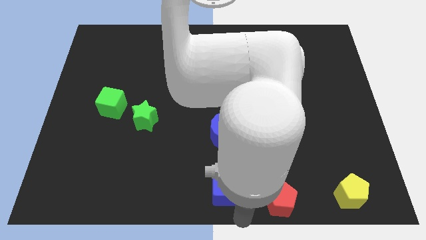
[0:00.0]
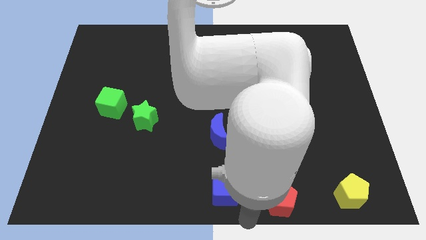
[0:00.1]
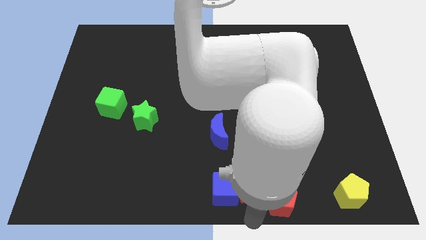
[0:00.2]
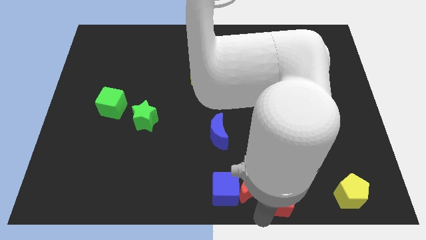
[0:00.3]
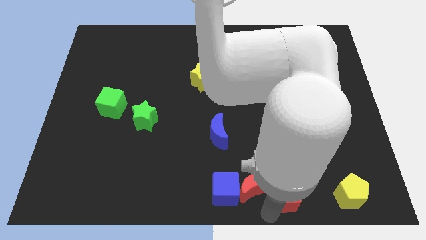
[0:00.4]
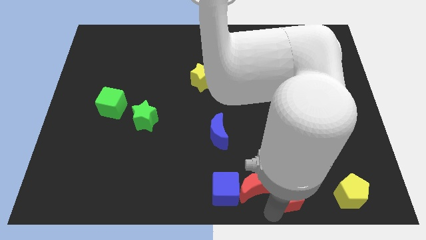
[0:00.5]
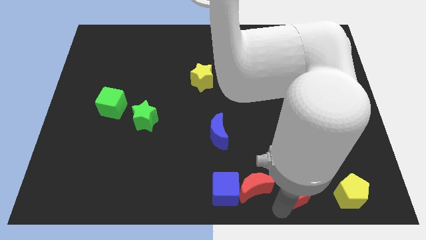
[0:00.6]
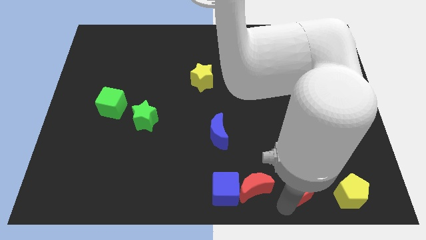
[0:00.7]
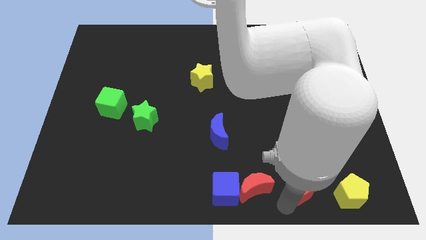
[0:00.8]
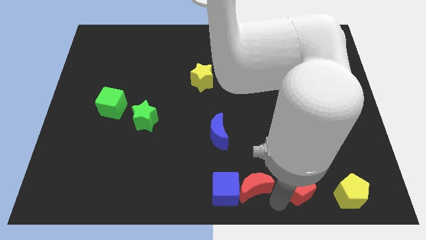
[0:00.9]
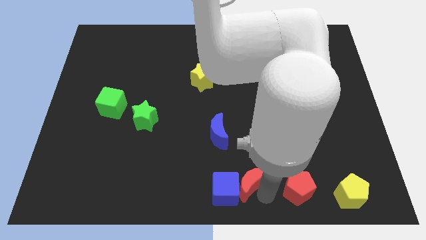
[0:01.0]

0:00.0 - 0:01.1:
separate red blocks from each other

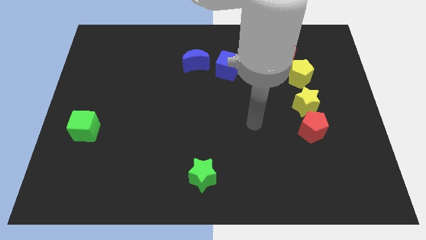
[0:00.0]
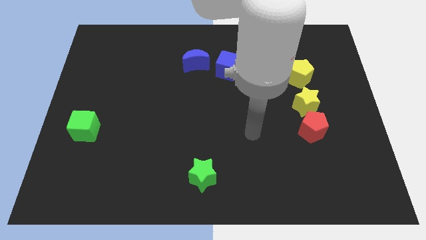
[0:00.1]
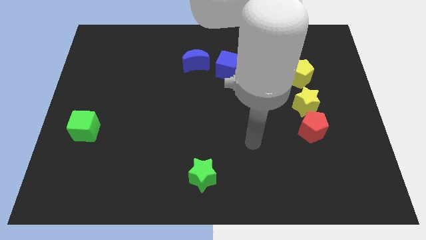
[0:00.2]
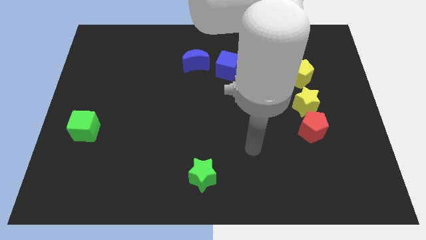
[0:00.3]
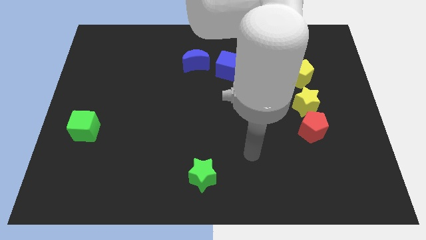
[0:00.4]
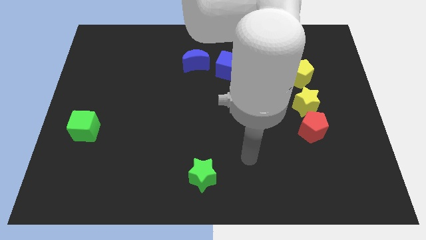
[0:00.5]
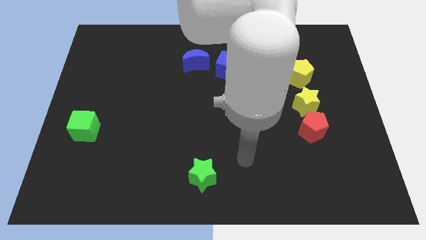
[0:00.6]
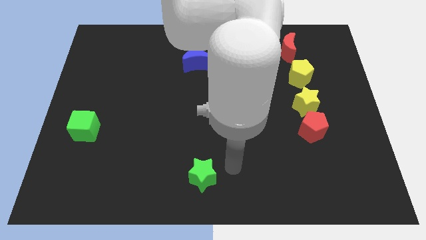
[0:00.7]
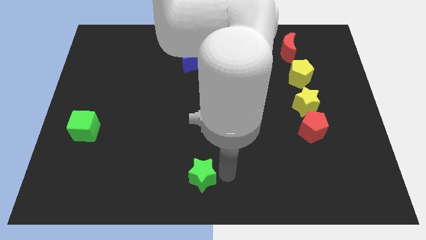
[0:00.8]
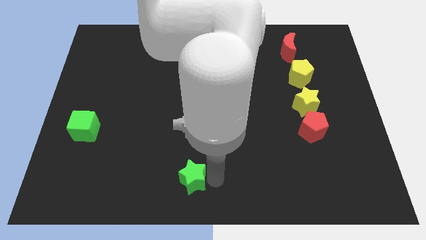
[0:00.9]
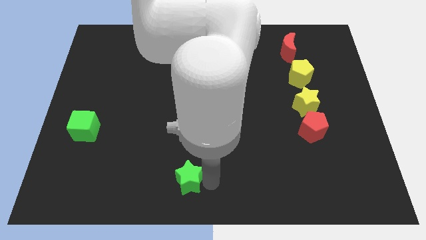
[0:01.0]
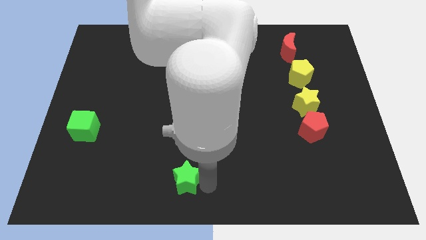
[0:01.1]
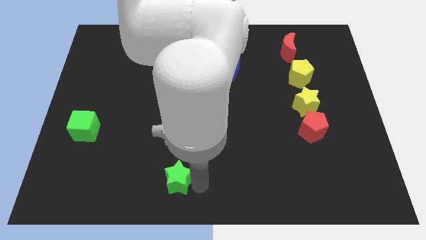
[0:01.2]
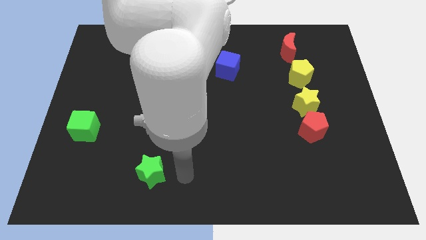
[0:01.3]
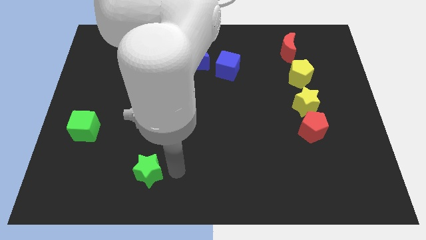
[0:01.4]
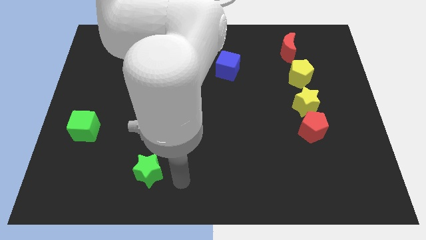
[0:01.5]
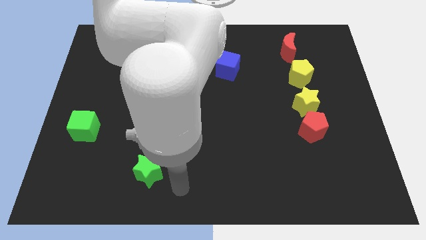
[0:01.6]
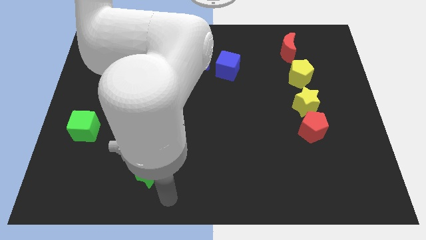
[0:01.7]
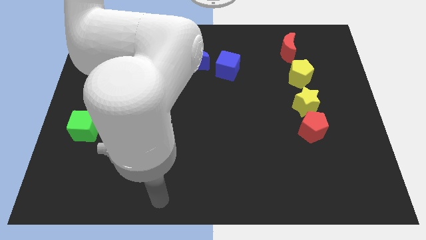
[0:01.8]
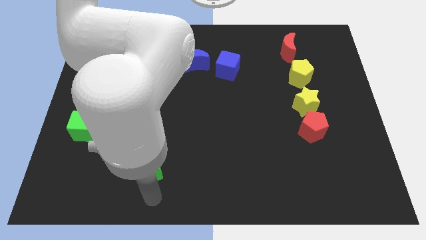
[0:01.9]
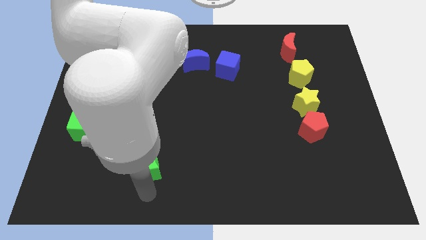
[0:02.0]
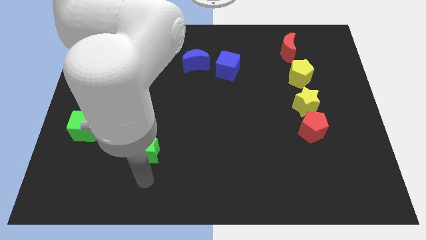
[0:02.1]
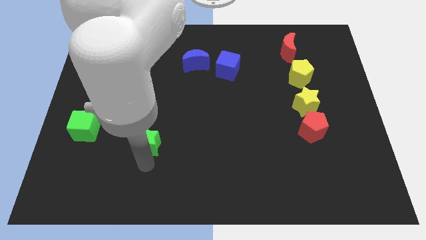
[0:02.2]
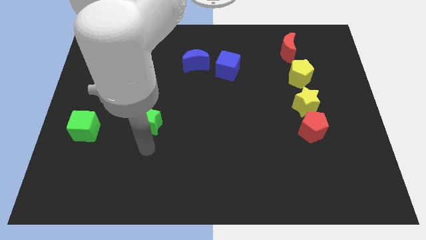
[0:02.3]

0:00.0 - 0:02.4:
place green star parallel right to green cube

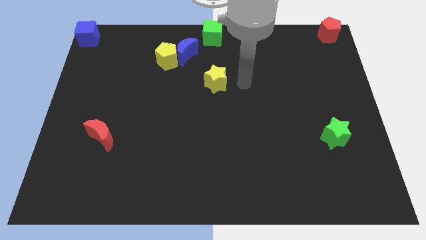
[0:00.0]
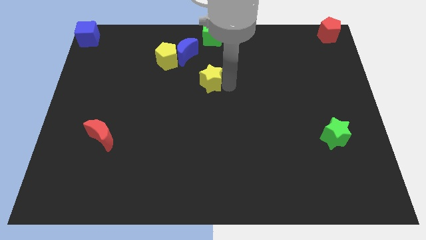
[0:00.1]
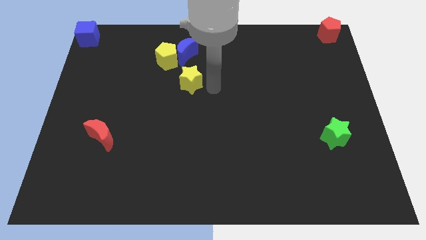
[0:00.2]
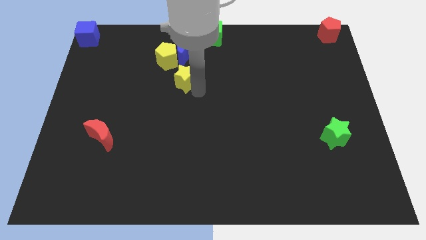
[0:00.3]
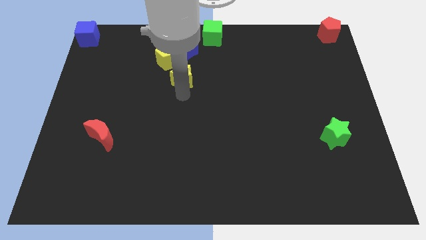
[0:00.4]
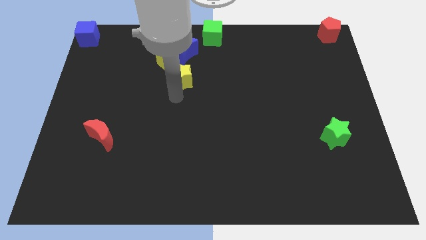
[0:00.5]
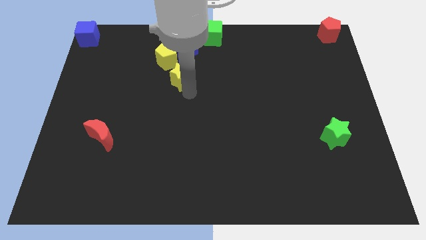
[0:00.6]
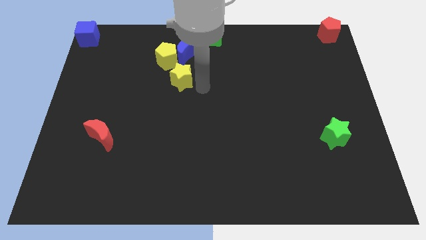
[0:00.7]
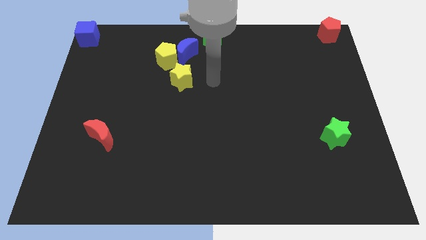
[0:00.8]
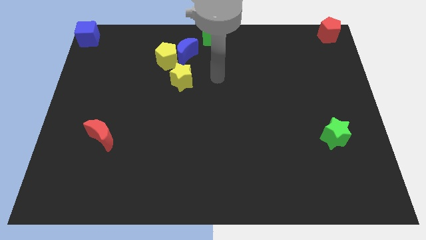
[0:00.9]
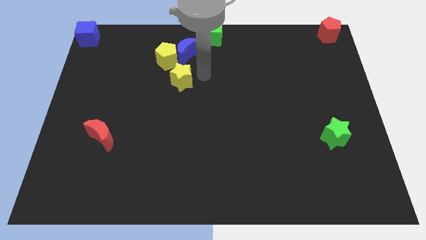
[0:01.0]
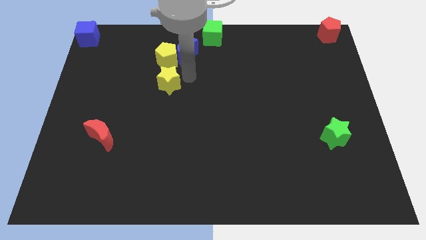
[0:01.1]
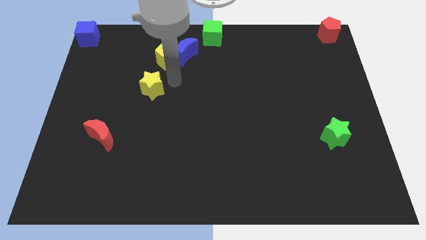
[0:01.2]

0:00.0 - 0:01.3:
place the yellow star at the bottom of yellow pentagon

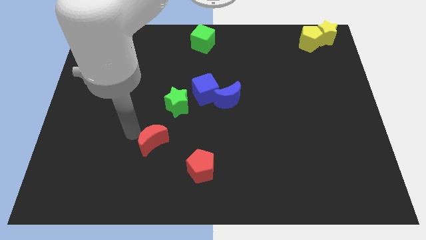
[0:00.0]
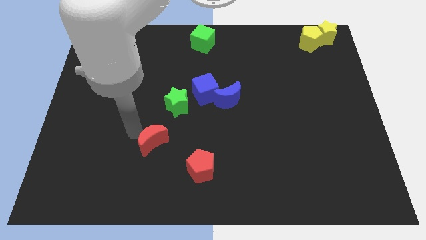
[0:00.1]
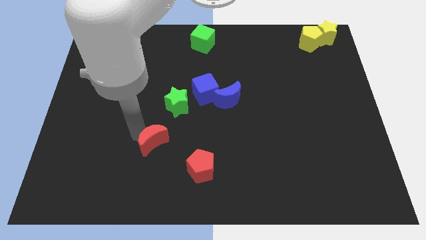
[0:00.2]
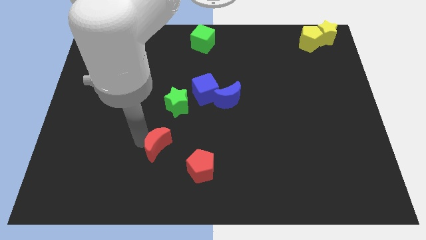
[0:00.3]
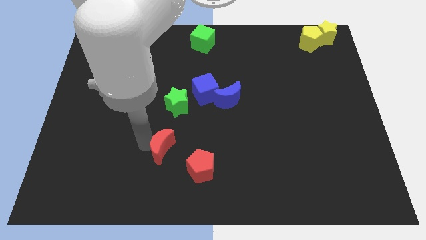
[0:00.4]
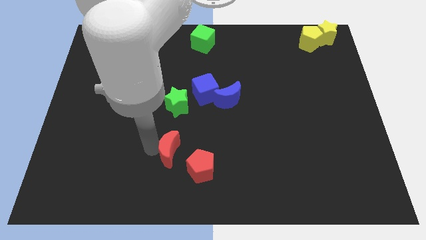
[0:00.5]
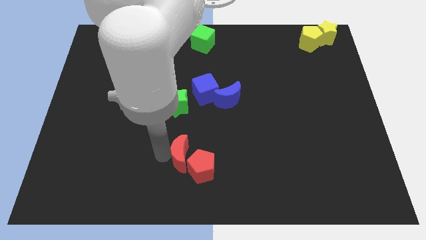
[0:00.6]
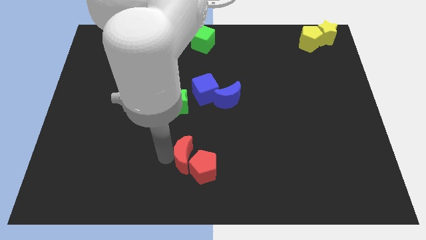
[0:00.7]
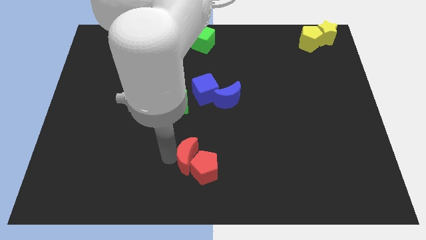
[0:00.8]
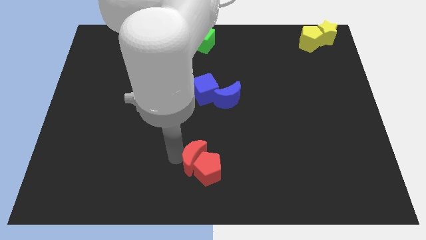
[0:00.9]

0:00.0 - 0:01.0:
push red crescent into the red pentagon

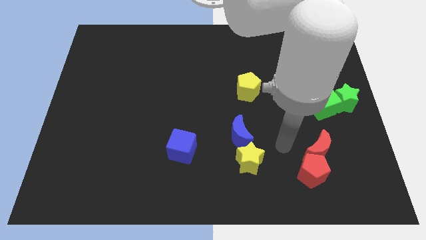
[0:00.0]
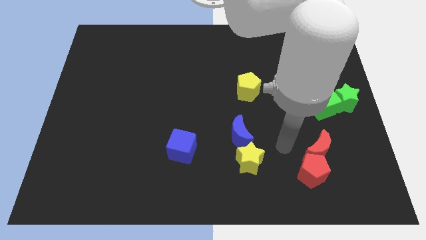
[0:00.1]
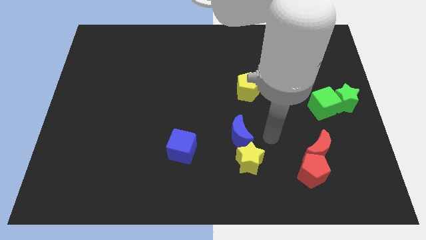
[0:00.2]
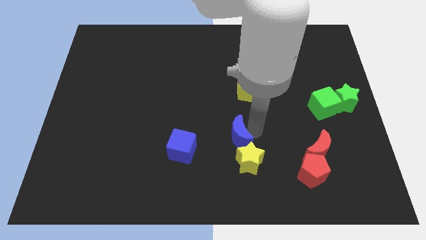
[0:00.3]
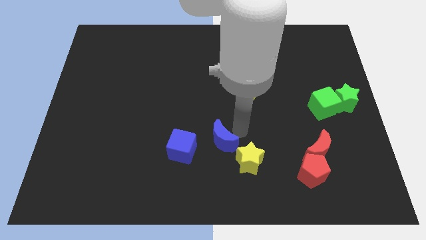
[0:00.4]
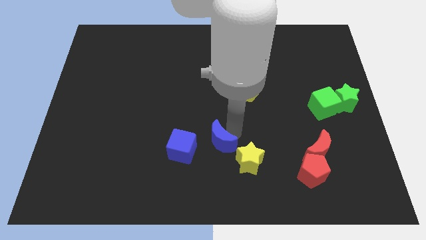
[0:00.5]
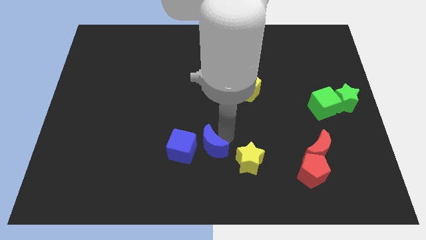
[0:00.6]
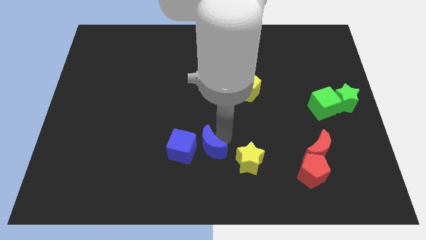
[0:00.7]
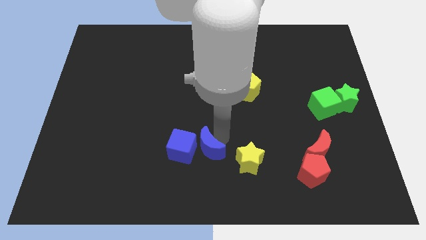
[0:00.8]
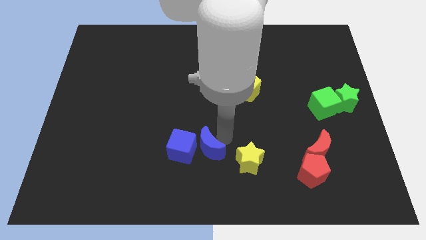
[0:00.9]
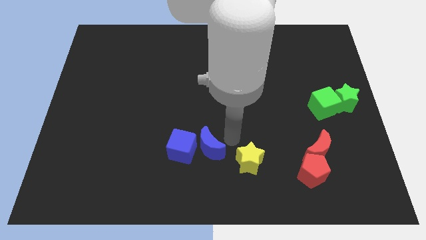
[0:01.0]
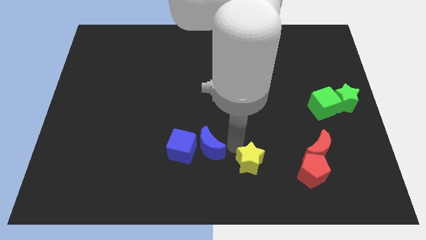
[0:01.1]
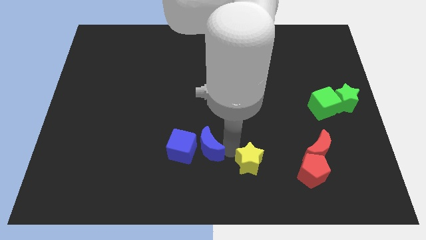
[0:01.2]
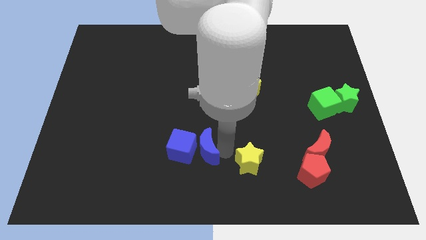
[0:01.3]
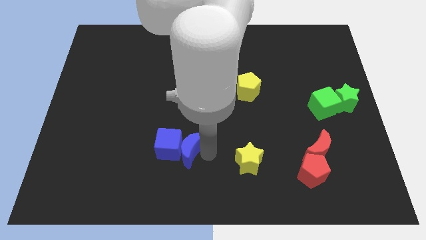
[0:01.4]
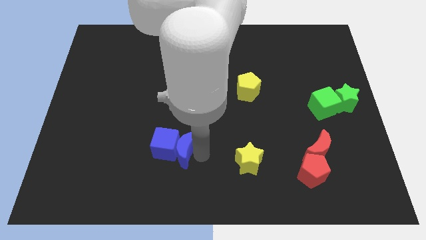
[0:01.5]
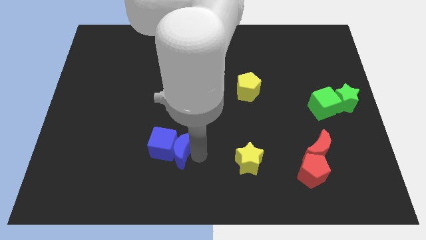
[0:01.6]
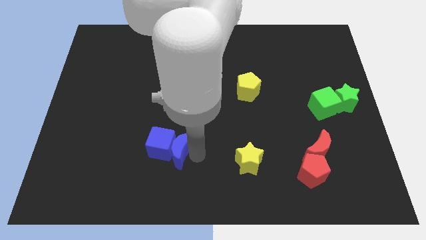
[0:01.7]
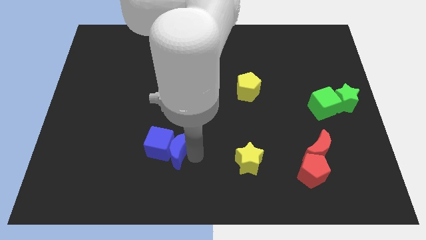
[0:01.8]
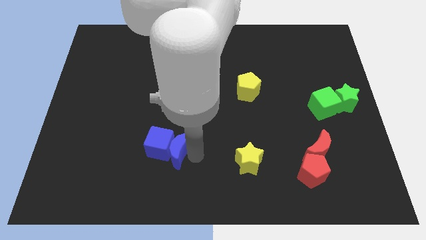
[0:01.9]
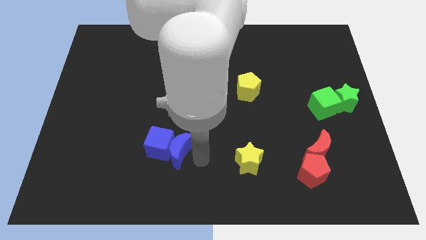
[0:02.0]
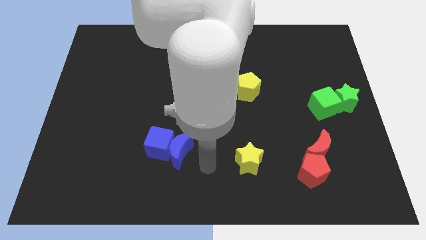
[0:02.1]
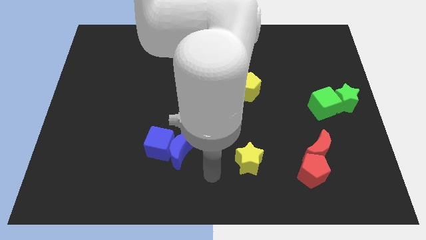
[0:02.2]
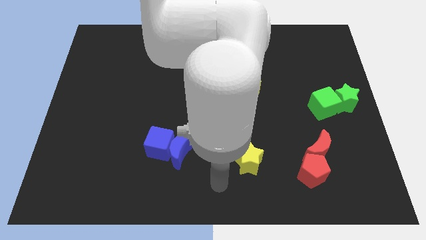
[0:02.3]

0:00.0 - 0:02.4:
push the blue crescent into the blue cube

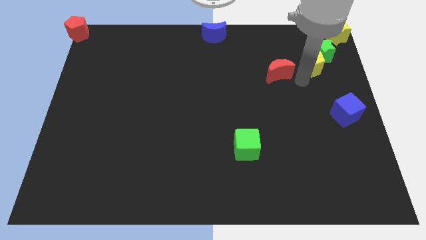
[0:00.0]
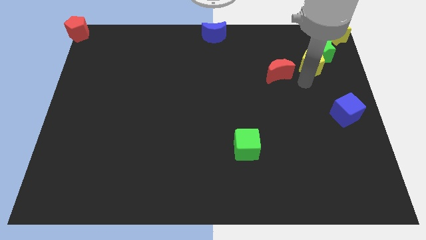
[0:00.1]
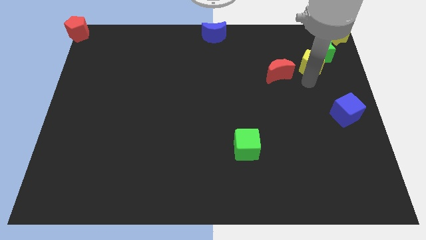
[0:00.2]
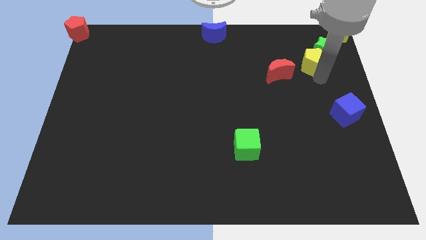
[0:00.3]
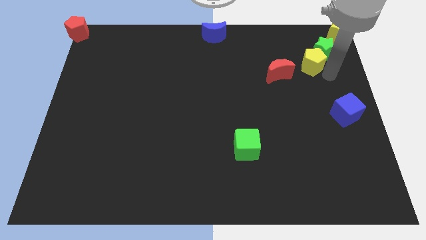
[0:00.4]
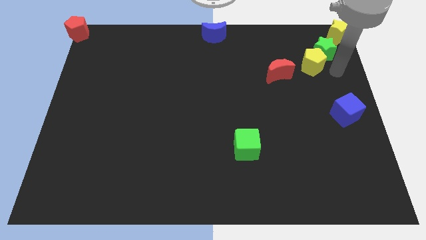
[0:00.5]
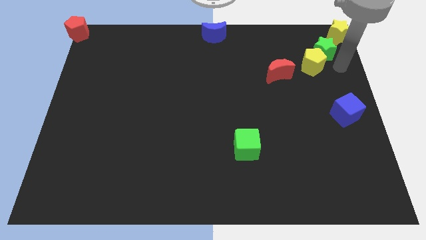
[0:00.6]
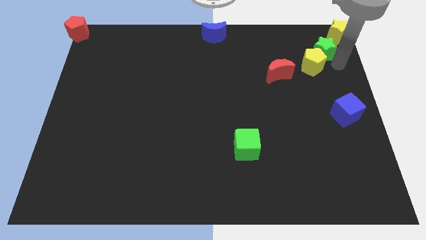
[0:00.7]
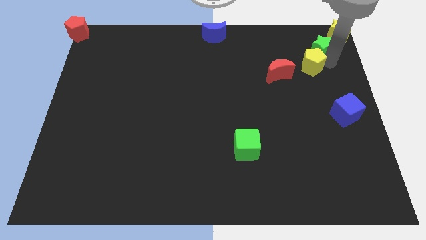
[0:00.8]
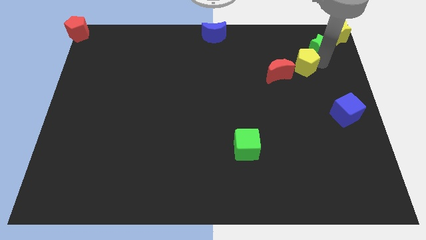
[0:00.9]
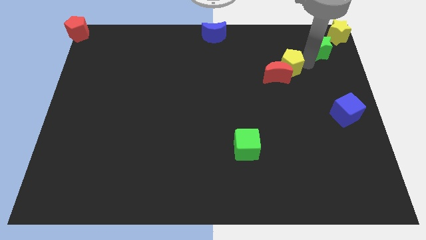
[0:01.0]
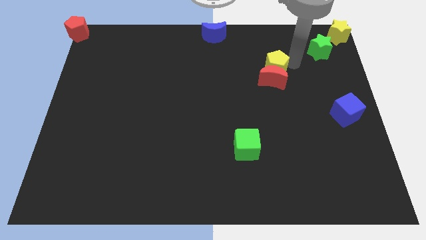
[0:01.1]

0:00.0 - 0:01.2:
place yellow pentagon above the red crescent
